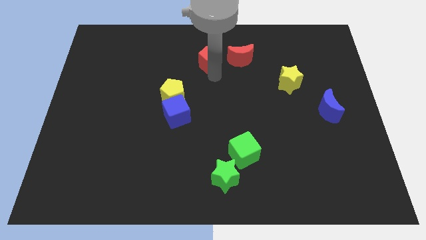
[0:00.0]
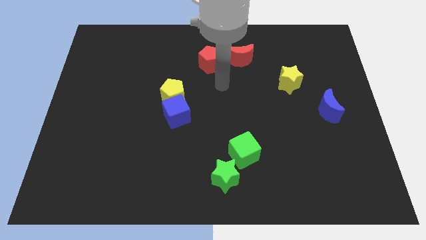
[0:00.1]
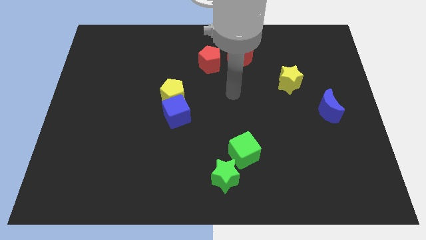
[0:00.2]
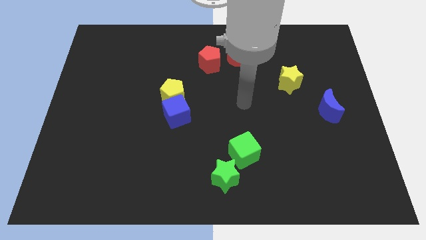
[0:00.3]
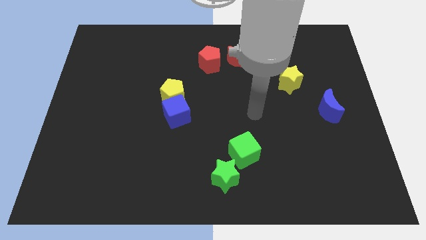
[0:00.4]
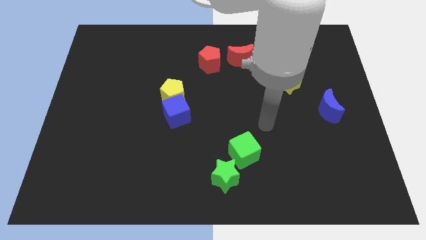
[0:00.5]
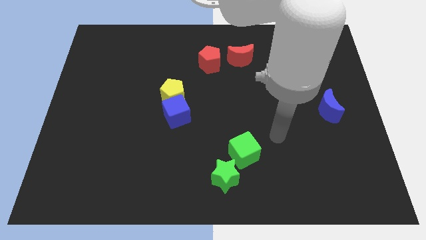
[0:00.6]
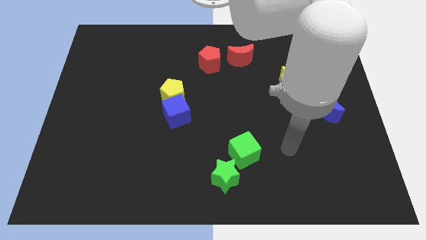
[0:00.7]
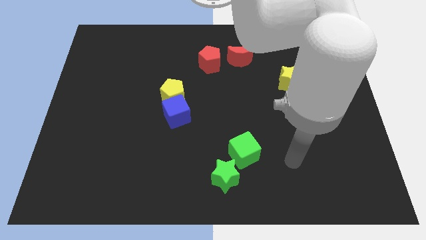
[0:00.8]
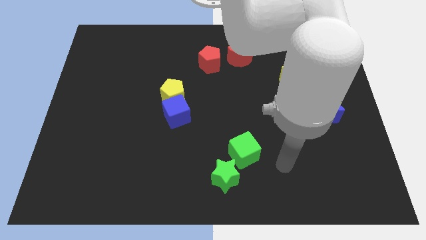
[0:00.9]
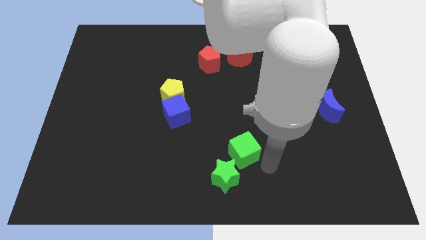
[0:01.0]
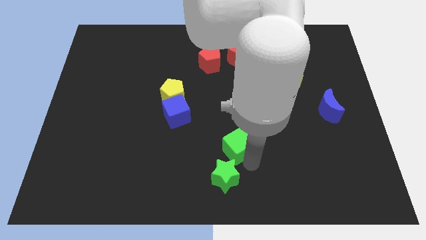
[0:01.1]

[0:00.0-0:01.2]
place your arm to the right of green cube

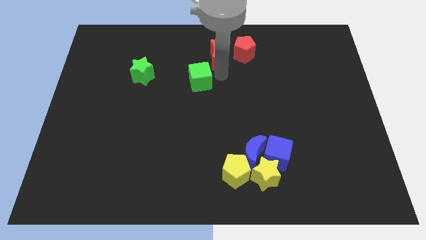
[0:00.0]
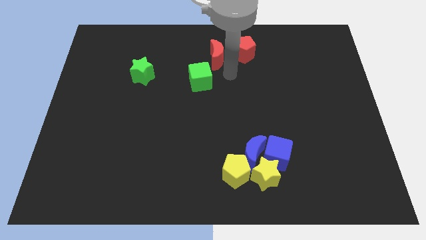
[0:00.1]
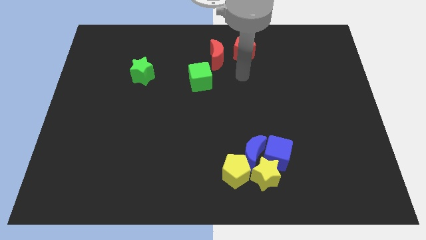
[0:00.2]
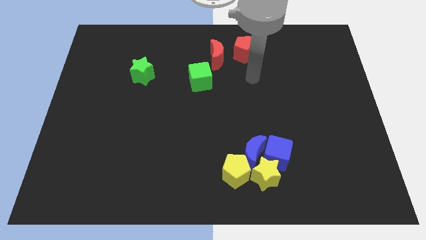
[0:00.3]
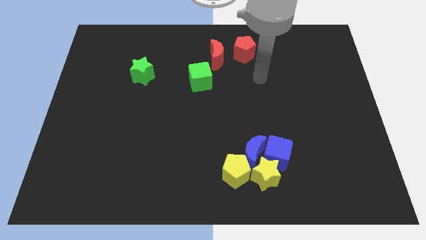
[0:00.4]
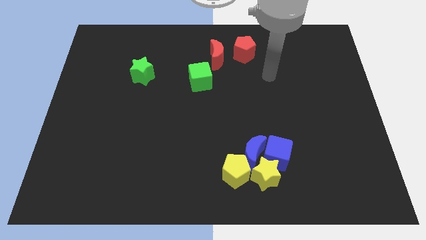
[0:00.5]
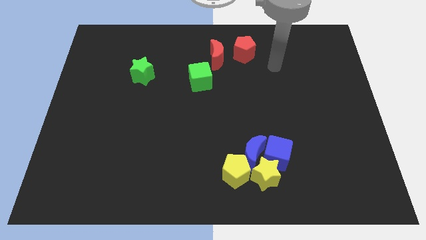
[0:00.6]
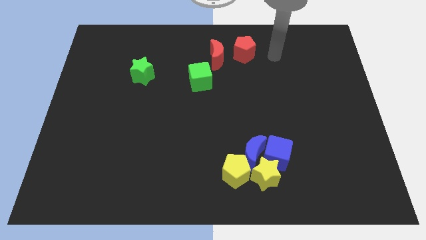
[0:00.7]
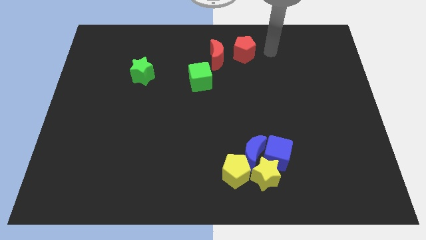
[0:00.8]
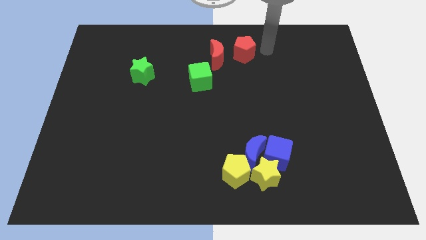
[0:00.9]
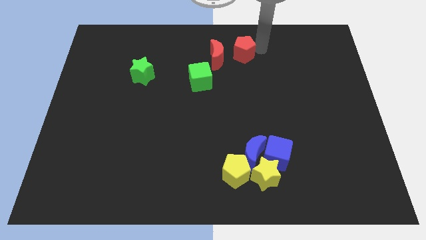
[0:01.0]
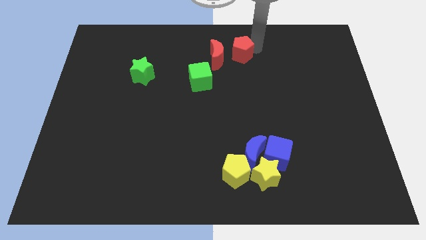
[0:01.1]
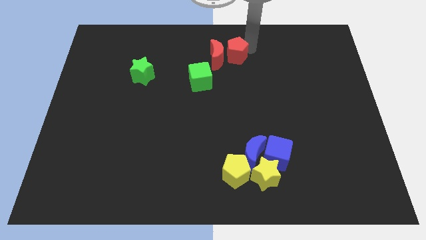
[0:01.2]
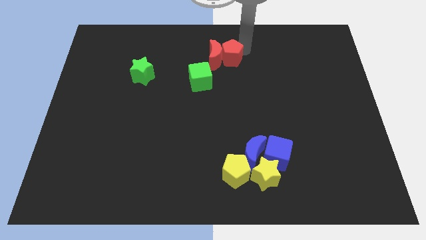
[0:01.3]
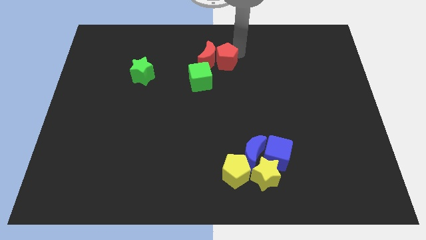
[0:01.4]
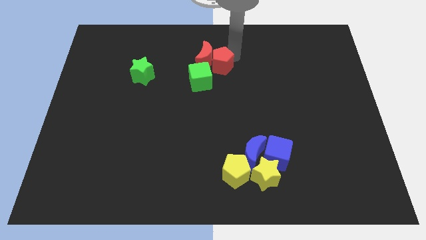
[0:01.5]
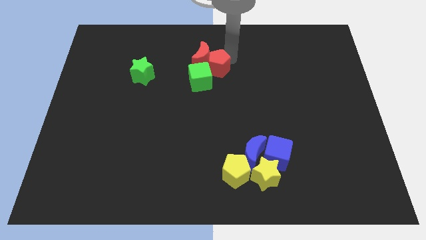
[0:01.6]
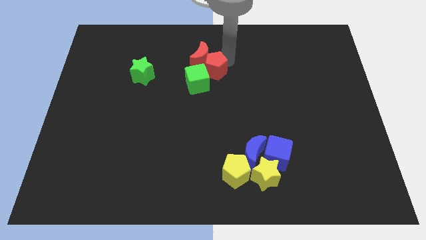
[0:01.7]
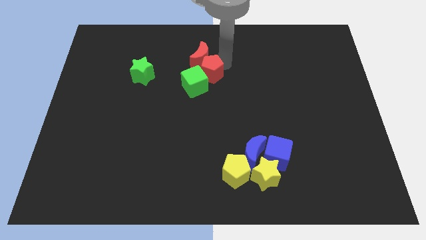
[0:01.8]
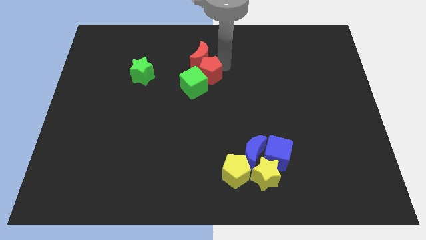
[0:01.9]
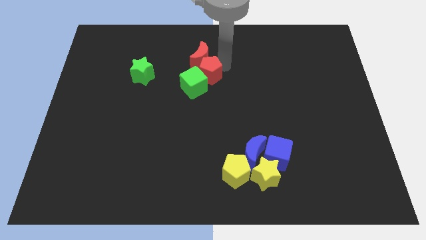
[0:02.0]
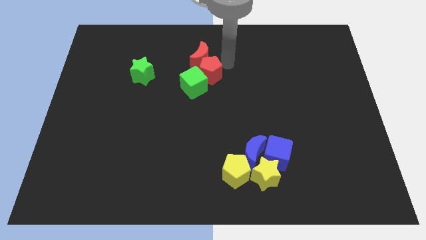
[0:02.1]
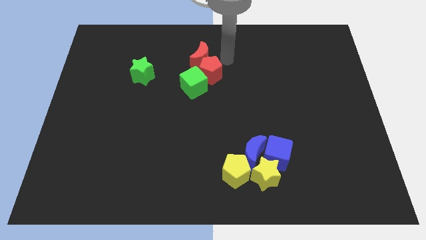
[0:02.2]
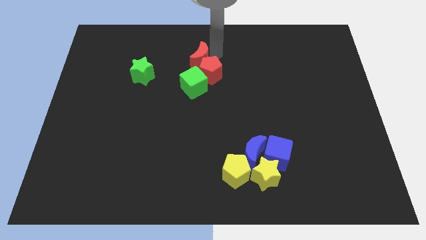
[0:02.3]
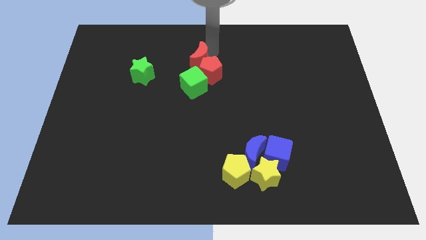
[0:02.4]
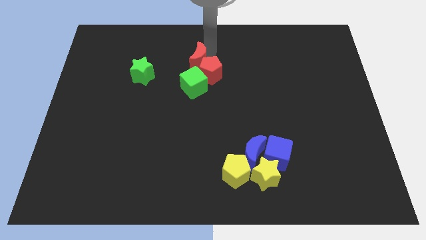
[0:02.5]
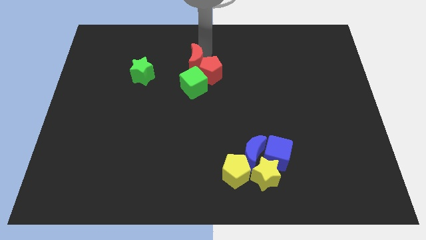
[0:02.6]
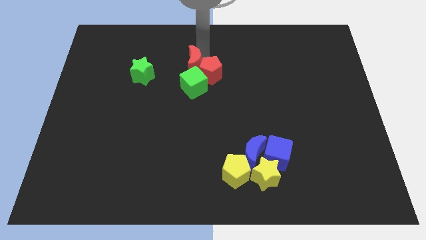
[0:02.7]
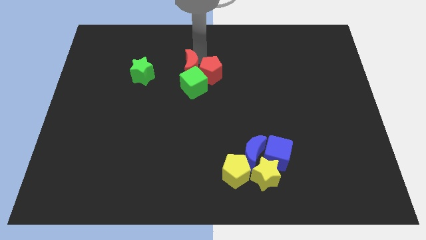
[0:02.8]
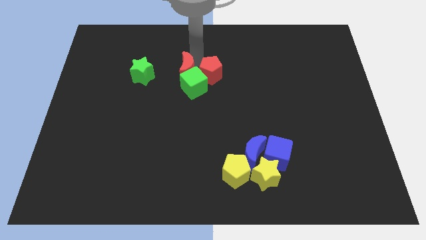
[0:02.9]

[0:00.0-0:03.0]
push the red crescent with the red pentagon

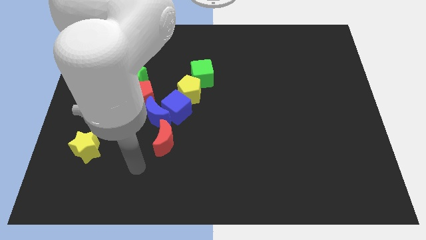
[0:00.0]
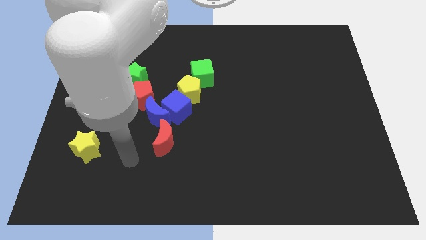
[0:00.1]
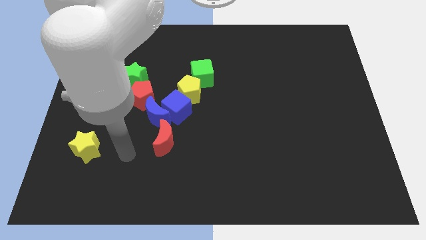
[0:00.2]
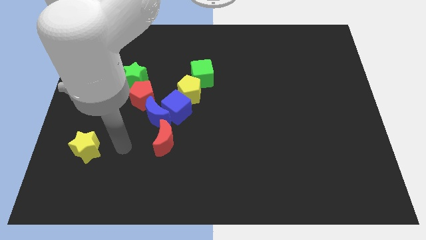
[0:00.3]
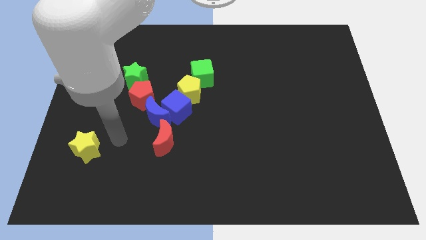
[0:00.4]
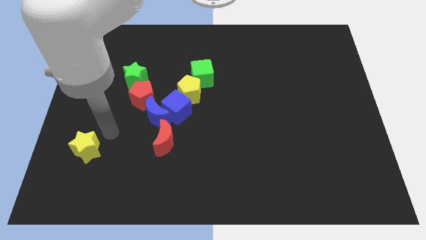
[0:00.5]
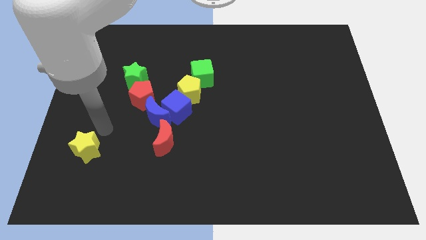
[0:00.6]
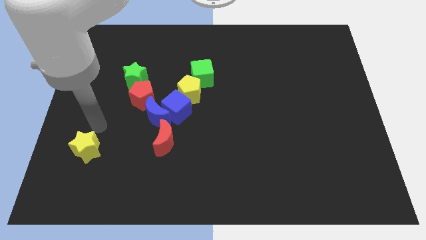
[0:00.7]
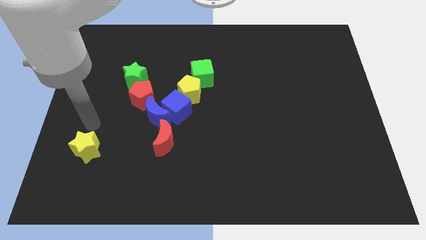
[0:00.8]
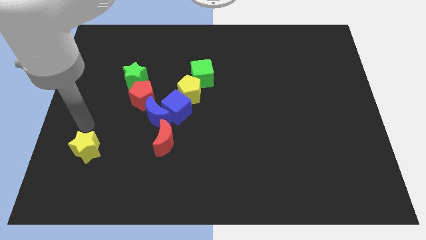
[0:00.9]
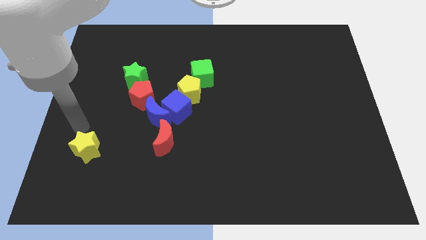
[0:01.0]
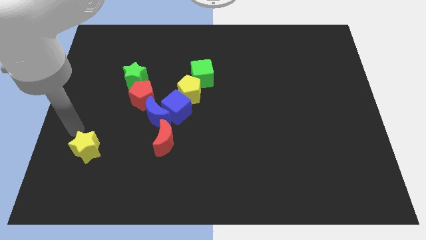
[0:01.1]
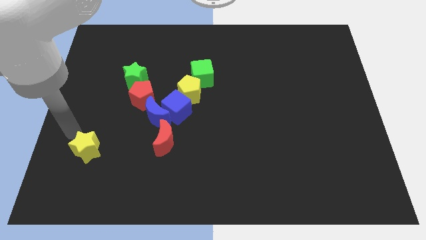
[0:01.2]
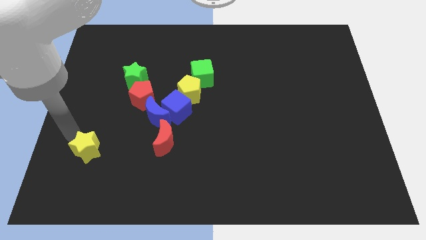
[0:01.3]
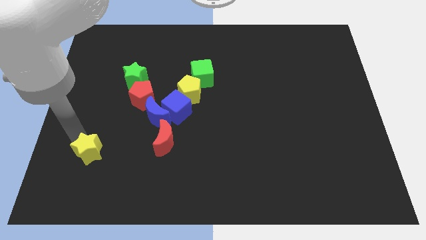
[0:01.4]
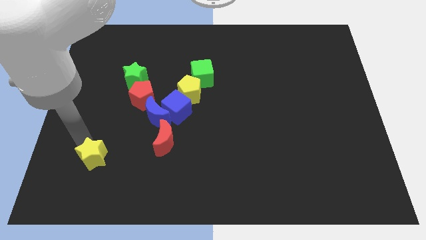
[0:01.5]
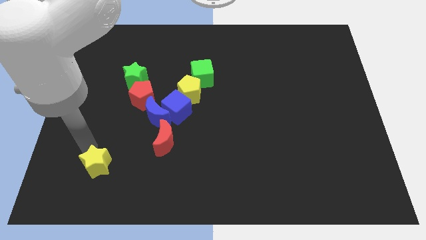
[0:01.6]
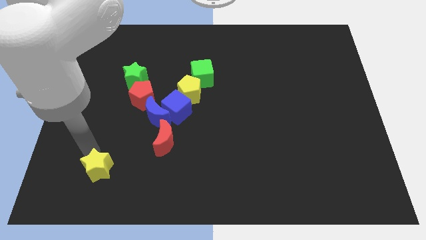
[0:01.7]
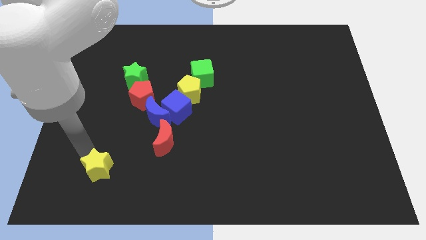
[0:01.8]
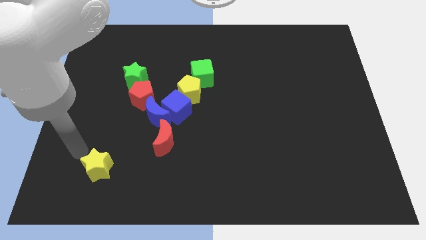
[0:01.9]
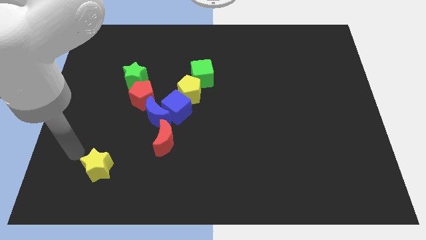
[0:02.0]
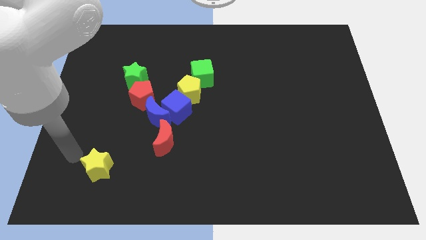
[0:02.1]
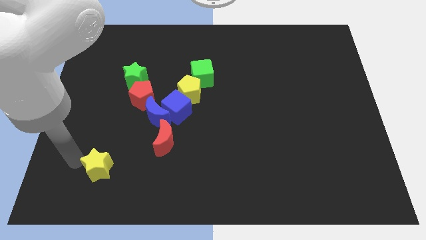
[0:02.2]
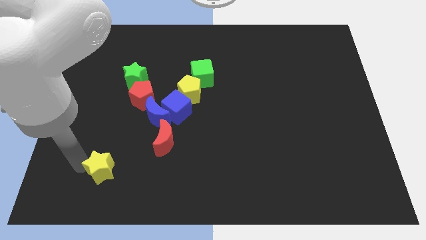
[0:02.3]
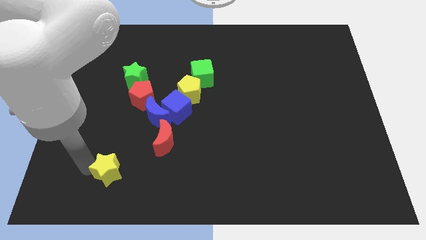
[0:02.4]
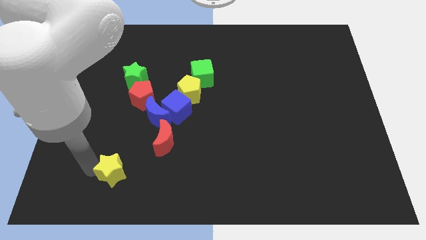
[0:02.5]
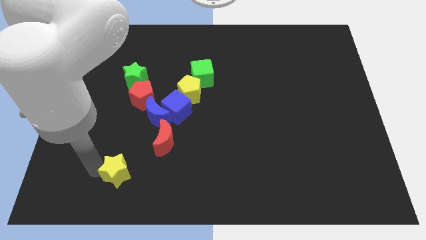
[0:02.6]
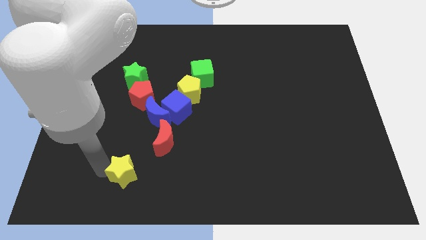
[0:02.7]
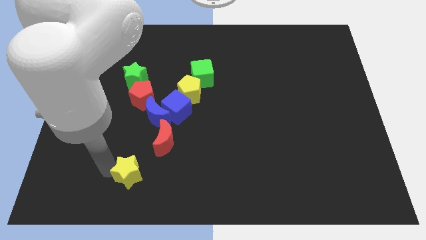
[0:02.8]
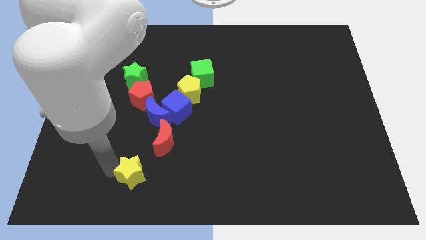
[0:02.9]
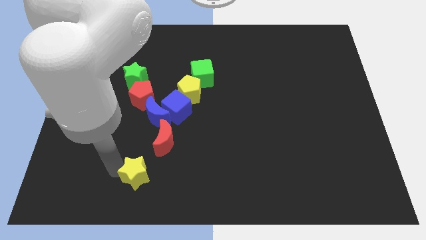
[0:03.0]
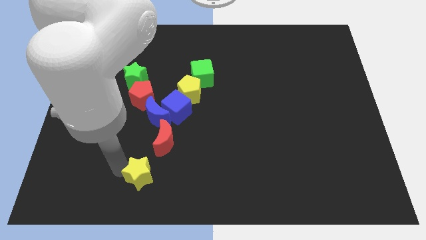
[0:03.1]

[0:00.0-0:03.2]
push the yellow star to bottom left of red moon

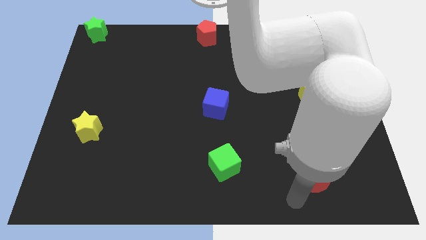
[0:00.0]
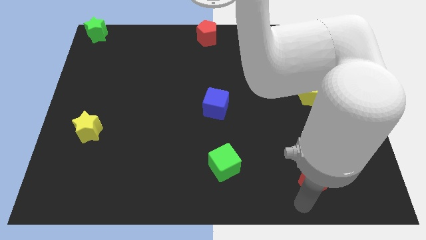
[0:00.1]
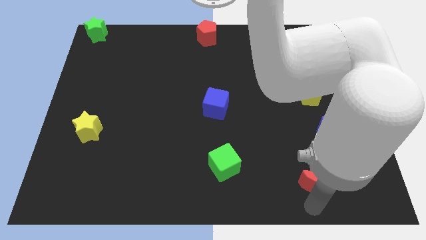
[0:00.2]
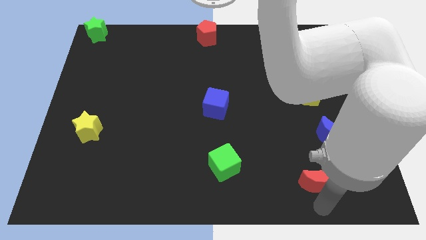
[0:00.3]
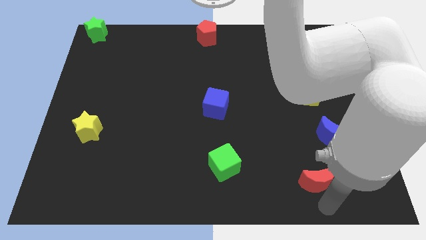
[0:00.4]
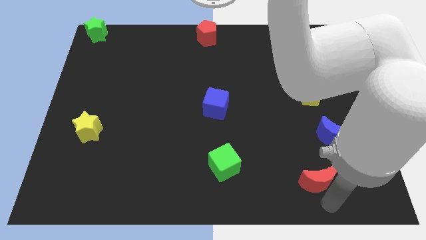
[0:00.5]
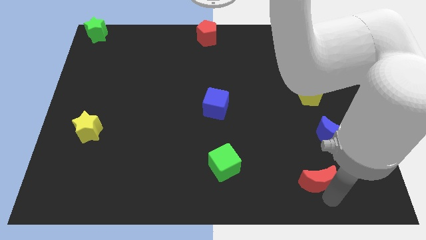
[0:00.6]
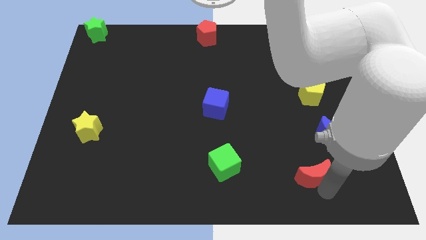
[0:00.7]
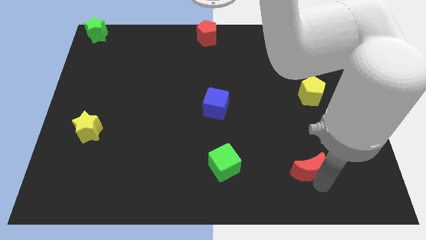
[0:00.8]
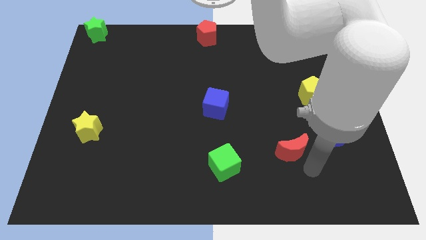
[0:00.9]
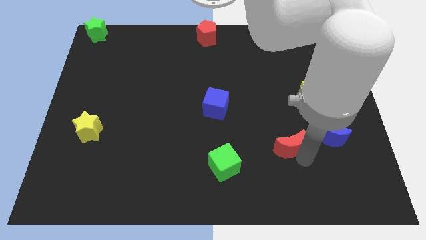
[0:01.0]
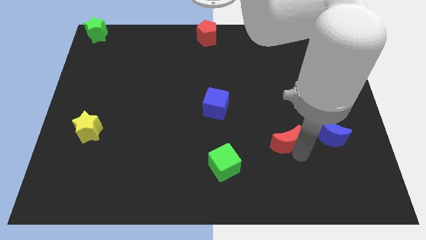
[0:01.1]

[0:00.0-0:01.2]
place the red moon in between the blue moon and green cube

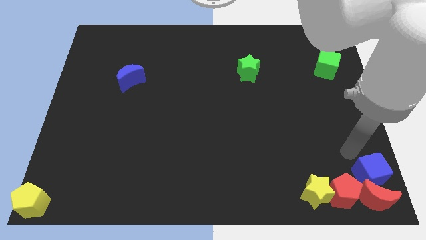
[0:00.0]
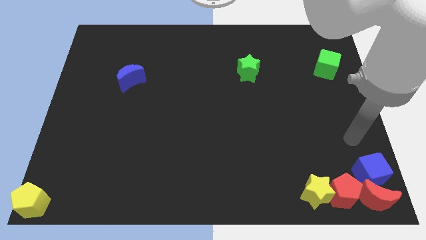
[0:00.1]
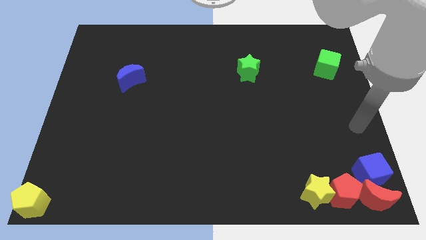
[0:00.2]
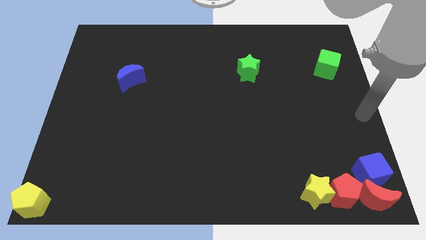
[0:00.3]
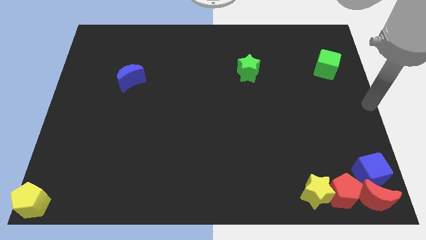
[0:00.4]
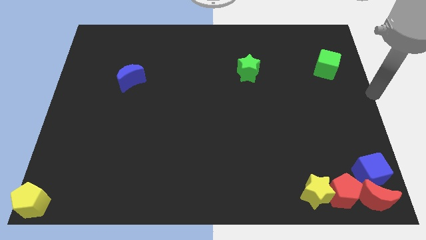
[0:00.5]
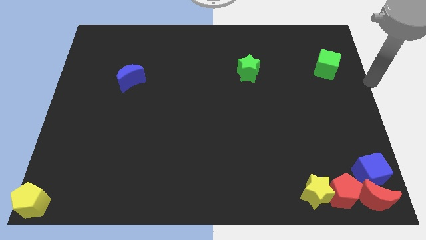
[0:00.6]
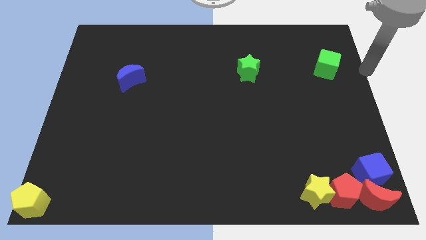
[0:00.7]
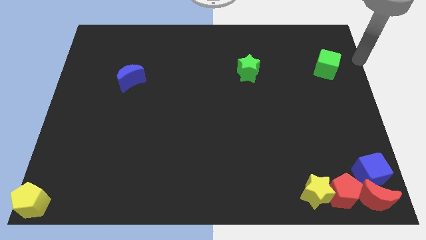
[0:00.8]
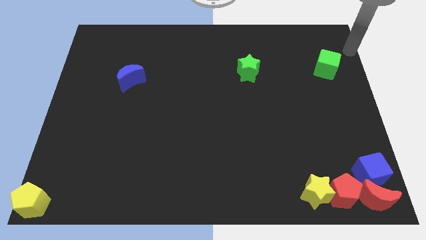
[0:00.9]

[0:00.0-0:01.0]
move your arm towards the top right of the board
